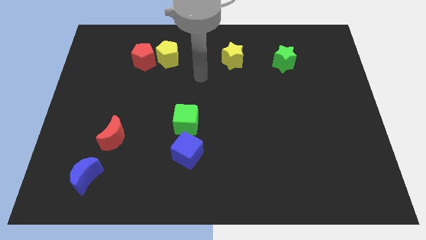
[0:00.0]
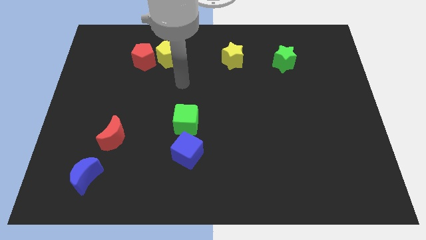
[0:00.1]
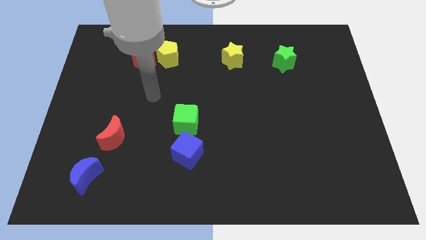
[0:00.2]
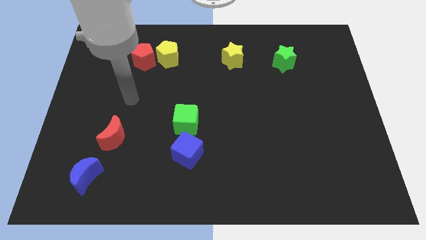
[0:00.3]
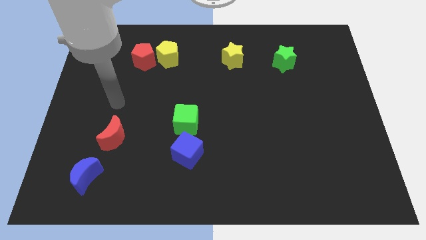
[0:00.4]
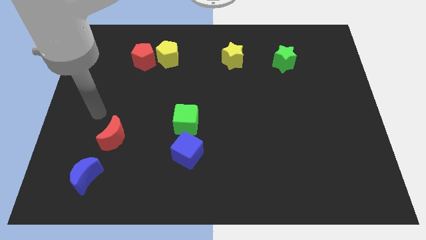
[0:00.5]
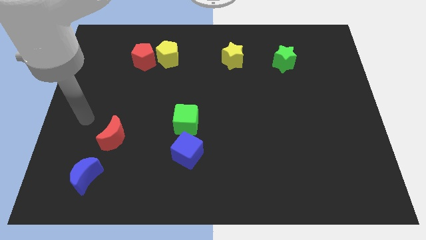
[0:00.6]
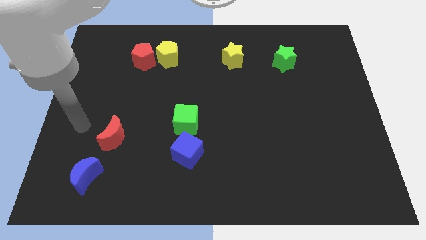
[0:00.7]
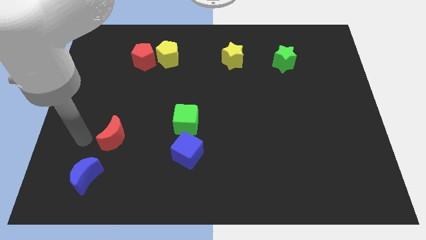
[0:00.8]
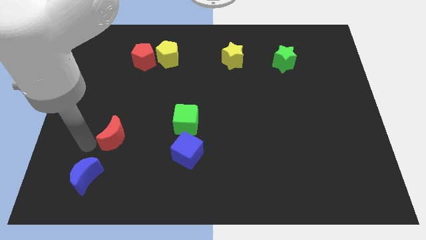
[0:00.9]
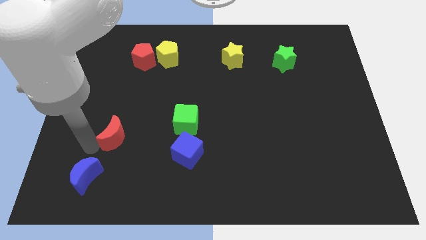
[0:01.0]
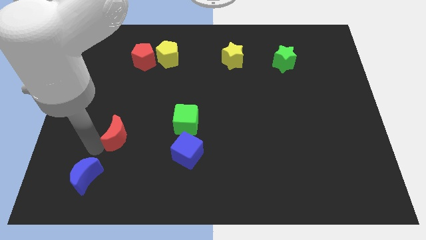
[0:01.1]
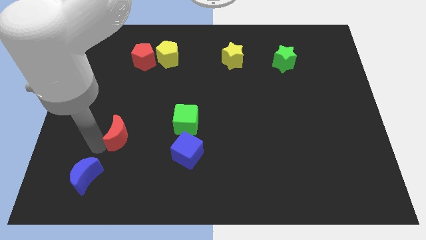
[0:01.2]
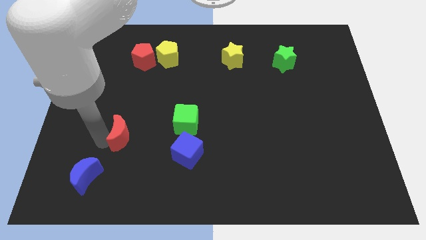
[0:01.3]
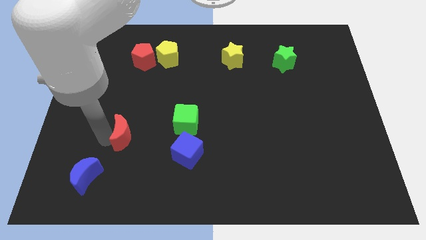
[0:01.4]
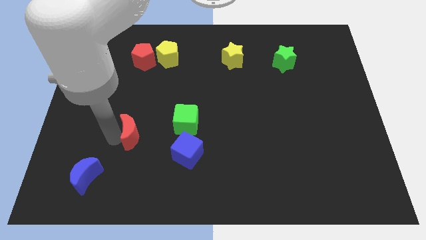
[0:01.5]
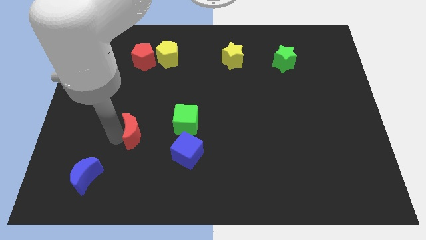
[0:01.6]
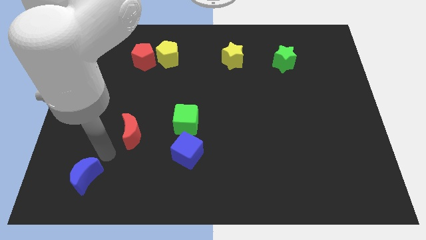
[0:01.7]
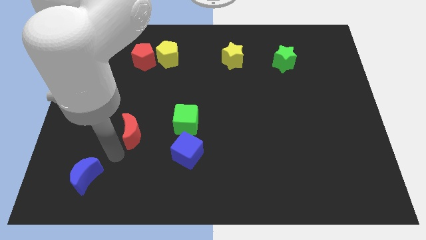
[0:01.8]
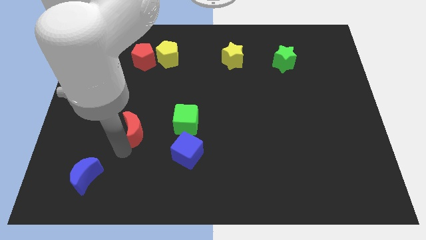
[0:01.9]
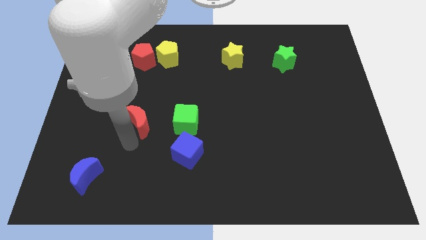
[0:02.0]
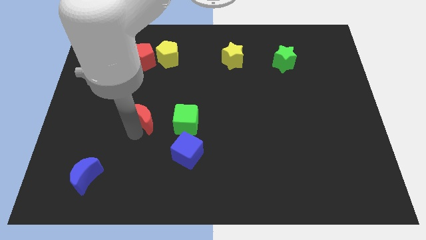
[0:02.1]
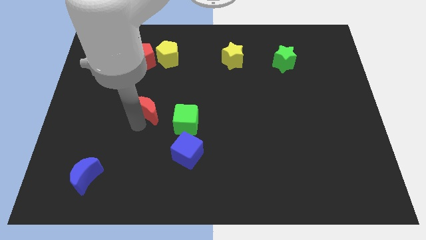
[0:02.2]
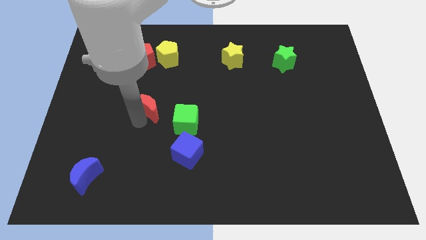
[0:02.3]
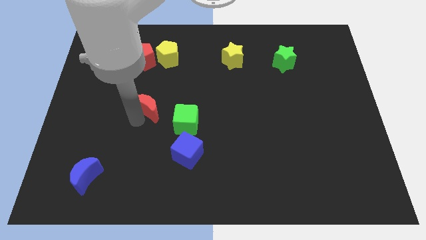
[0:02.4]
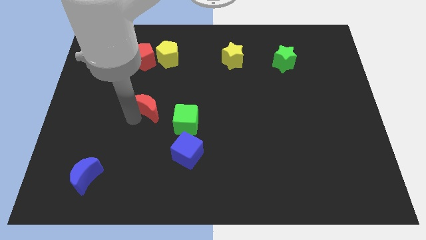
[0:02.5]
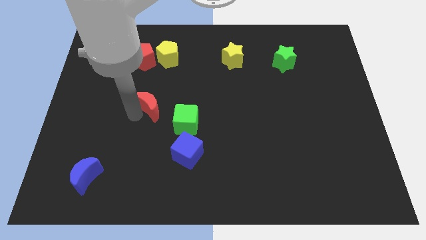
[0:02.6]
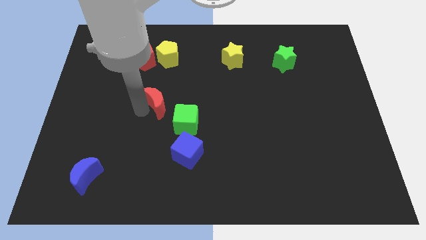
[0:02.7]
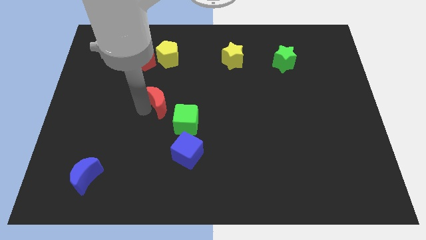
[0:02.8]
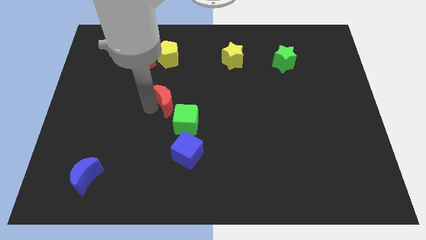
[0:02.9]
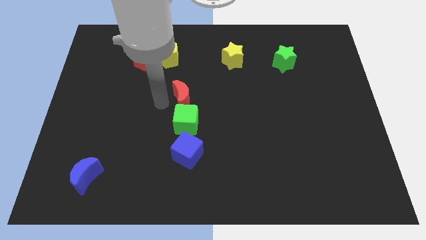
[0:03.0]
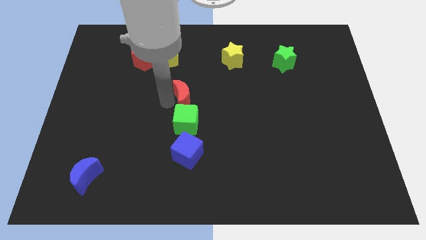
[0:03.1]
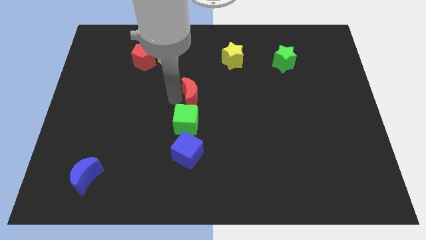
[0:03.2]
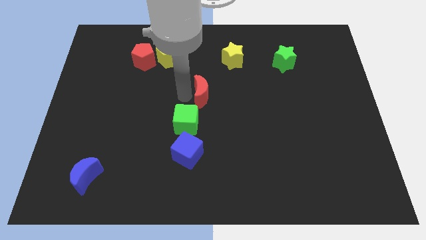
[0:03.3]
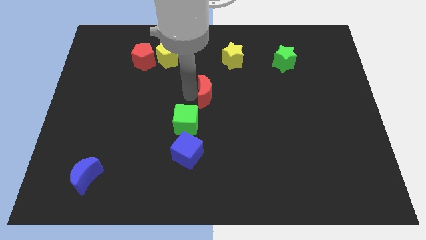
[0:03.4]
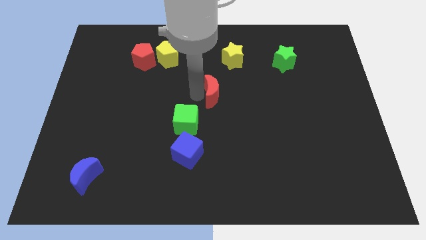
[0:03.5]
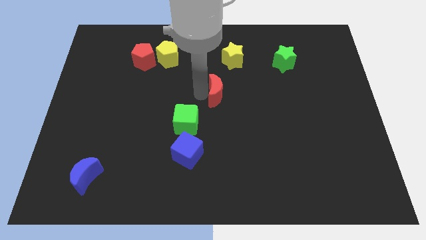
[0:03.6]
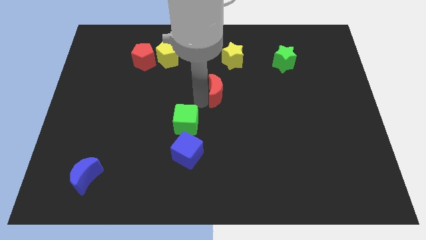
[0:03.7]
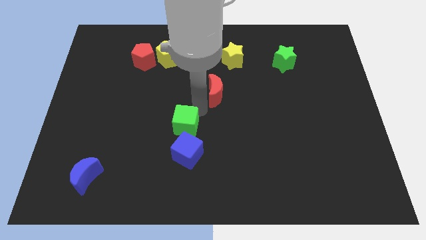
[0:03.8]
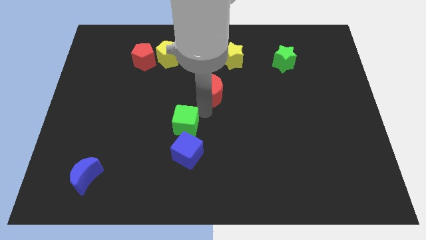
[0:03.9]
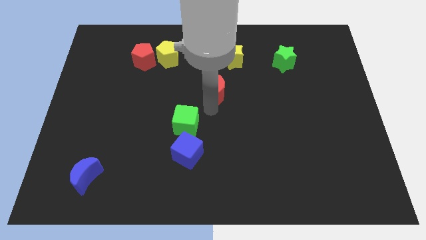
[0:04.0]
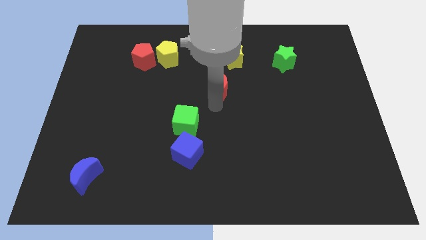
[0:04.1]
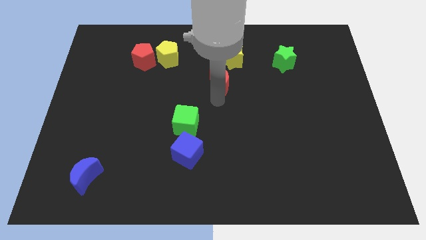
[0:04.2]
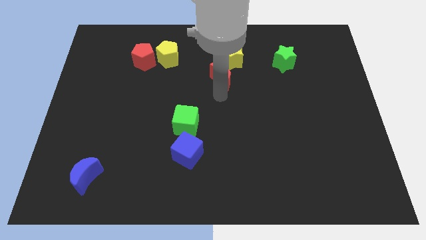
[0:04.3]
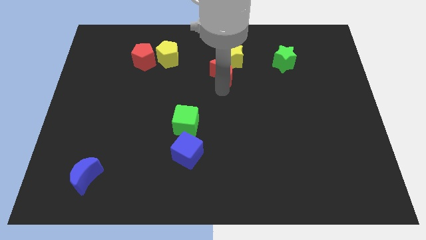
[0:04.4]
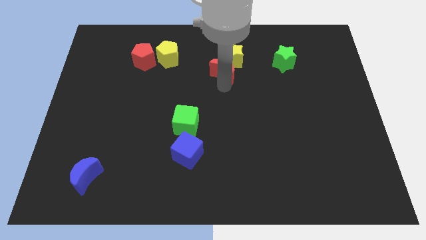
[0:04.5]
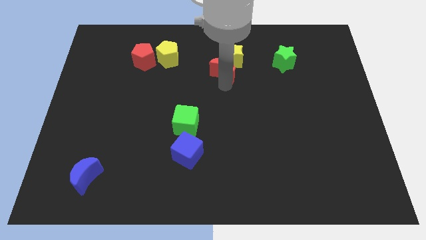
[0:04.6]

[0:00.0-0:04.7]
move the red moon close to the yellow star

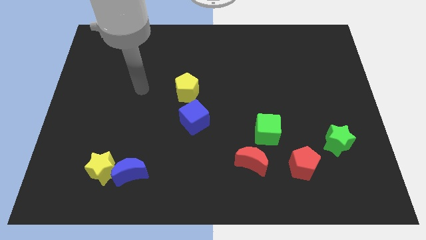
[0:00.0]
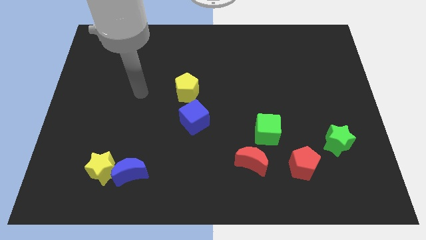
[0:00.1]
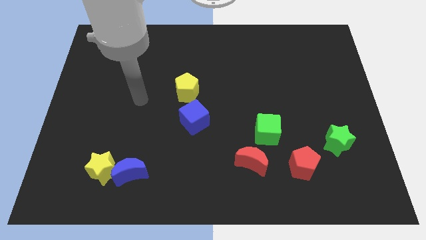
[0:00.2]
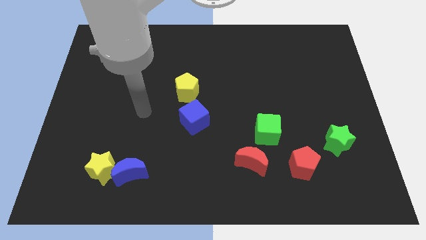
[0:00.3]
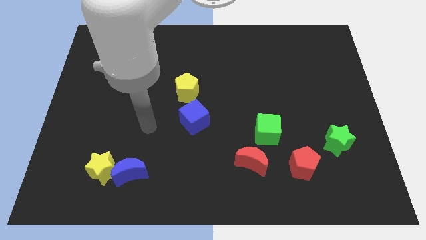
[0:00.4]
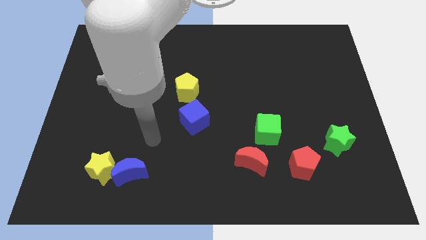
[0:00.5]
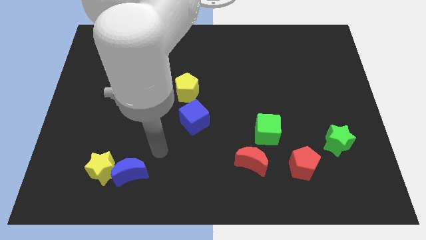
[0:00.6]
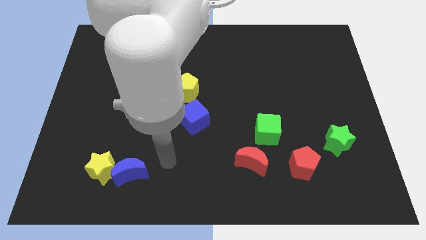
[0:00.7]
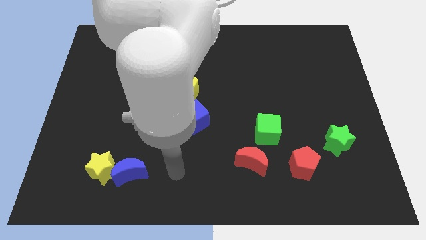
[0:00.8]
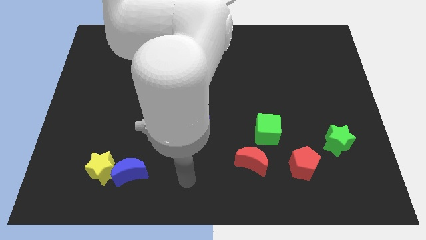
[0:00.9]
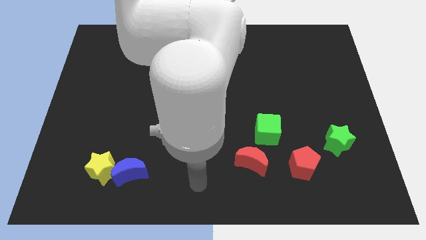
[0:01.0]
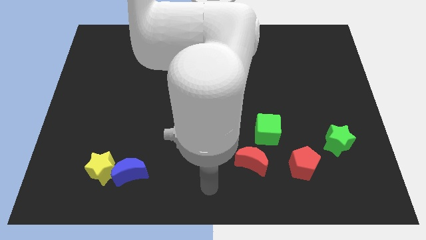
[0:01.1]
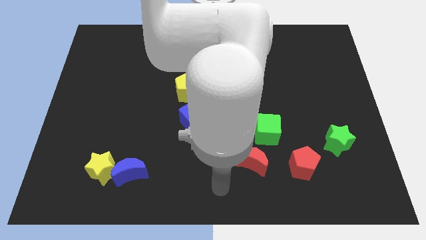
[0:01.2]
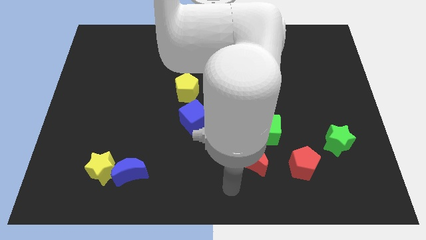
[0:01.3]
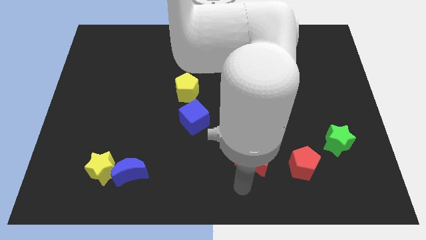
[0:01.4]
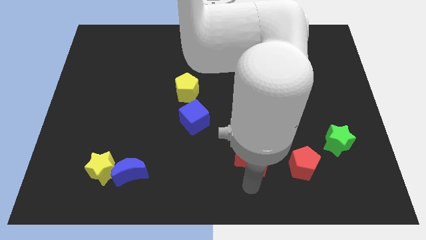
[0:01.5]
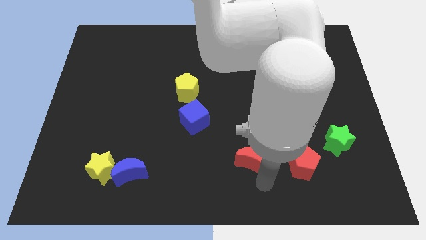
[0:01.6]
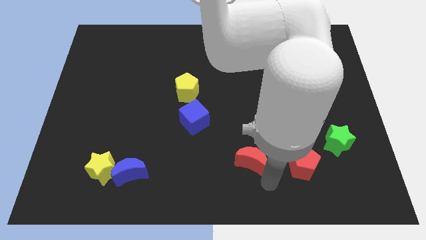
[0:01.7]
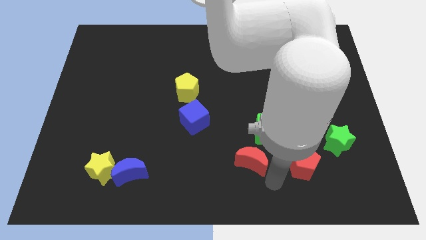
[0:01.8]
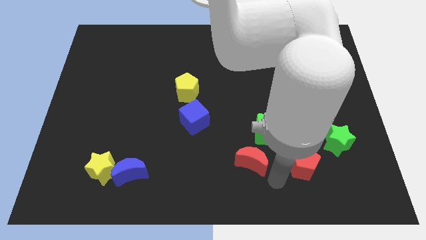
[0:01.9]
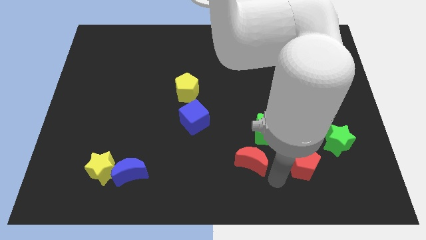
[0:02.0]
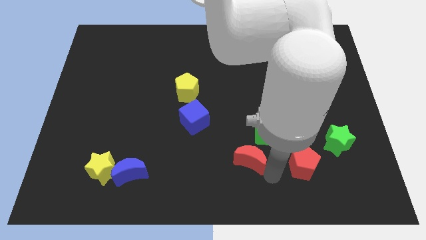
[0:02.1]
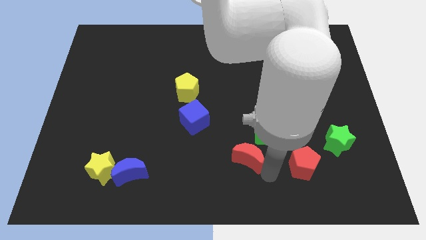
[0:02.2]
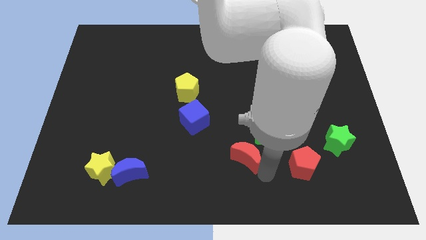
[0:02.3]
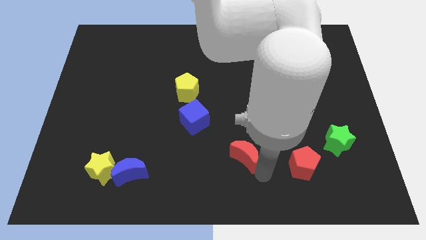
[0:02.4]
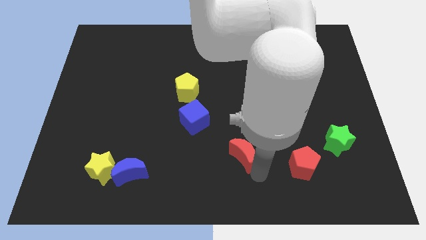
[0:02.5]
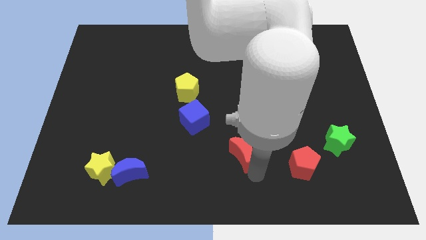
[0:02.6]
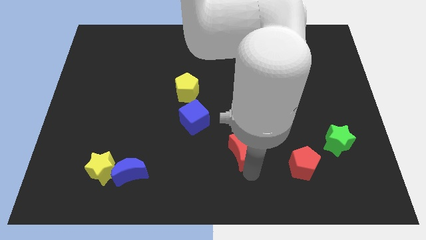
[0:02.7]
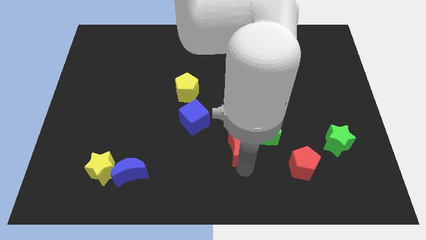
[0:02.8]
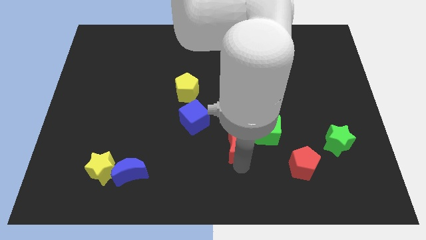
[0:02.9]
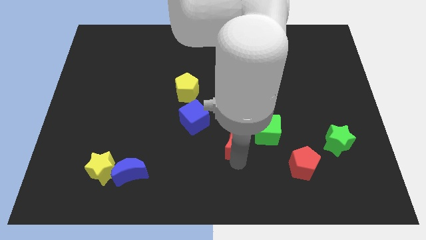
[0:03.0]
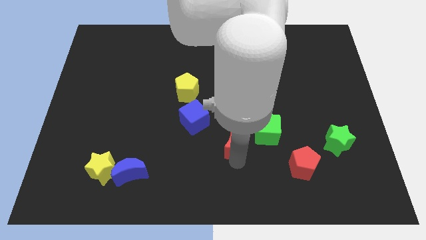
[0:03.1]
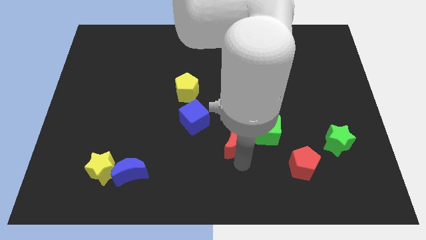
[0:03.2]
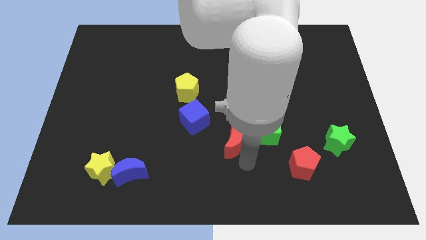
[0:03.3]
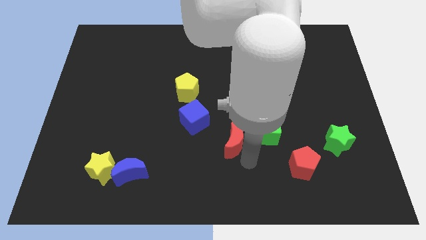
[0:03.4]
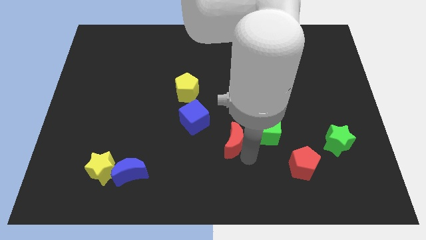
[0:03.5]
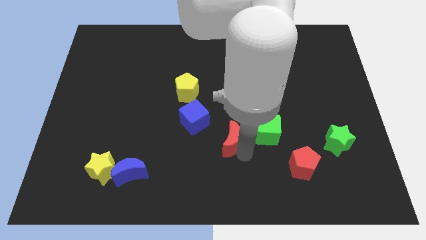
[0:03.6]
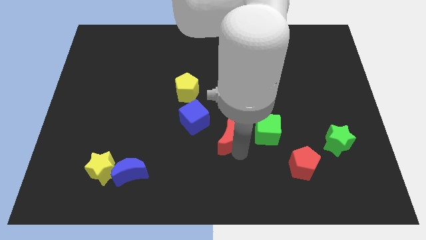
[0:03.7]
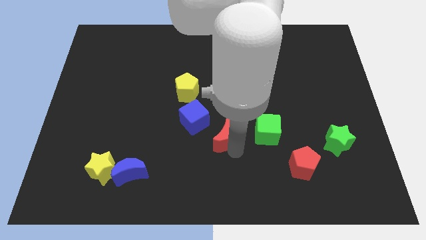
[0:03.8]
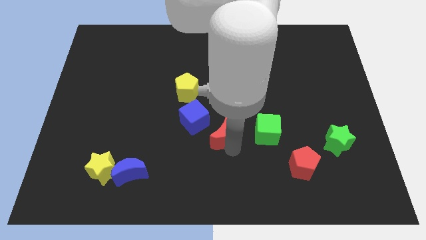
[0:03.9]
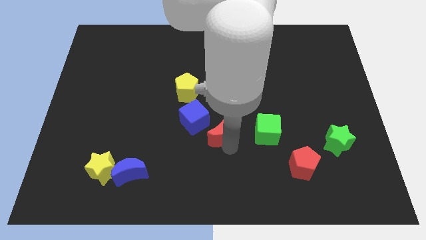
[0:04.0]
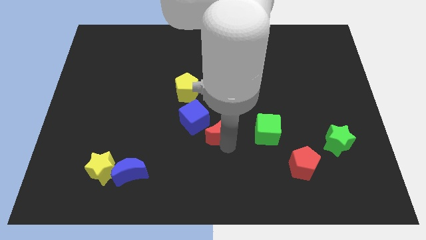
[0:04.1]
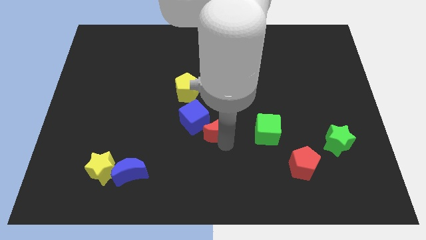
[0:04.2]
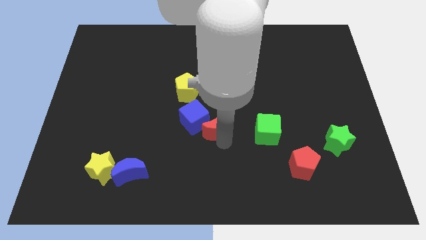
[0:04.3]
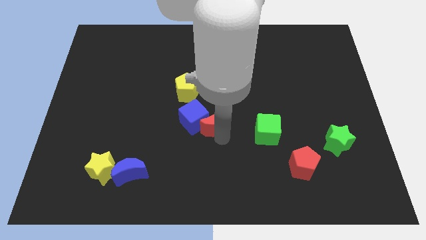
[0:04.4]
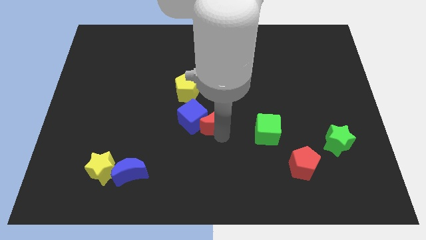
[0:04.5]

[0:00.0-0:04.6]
push the red moon to the blue cube
